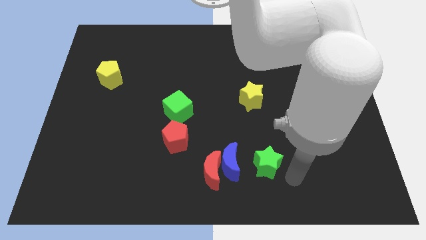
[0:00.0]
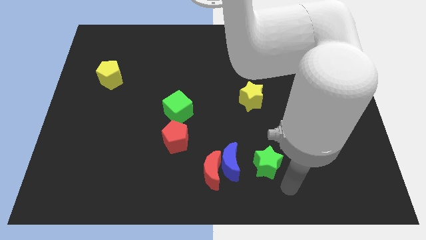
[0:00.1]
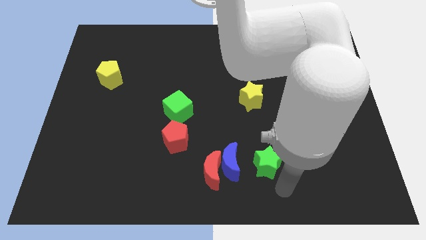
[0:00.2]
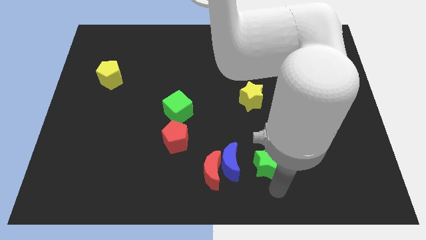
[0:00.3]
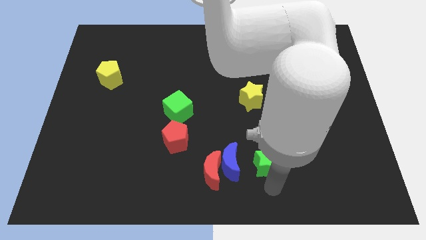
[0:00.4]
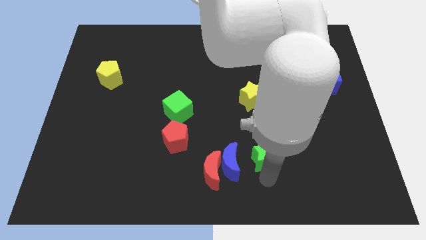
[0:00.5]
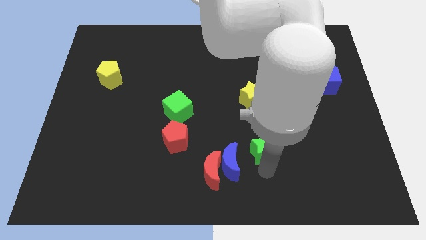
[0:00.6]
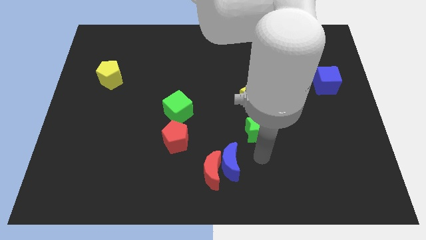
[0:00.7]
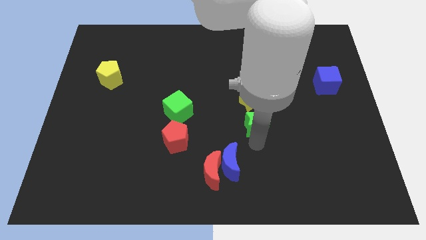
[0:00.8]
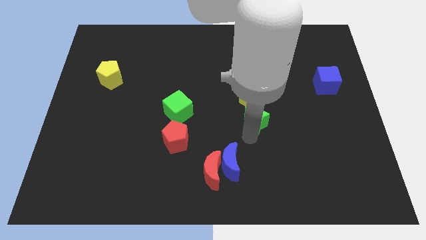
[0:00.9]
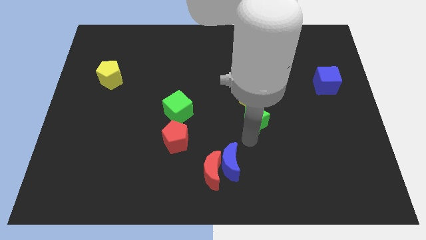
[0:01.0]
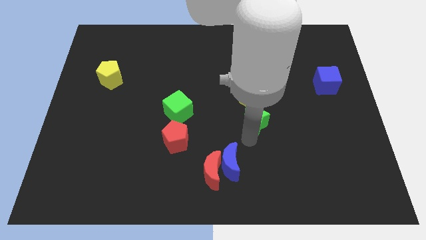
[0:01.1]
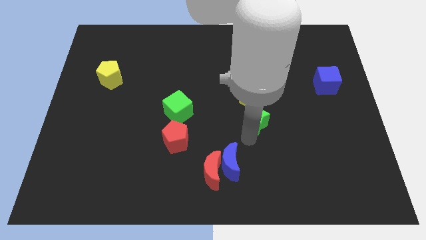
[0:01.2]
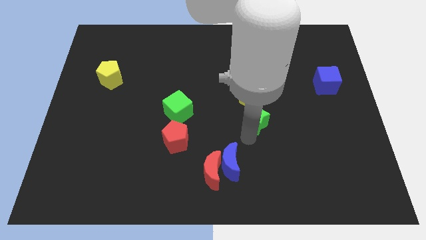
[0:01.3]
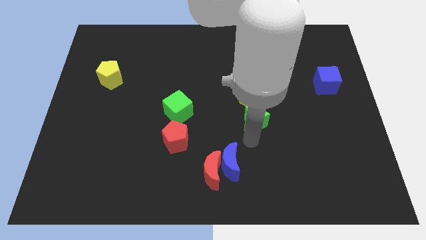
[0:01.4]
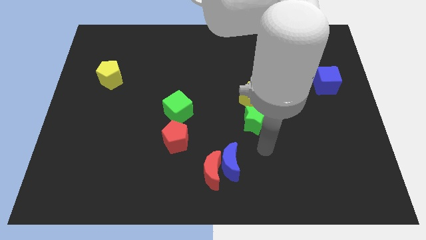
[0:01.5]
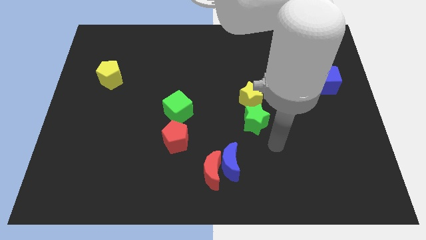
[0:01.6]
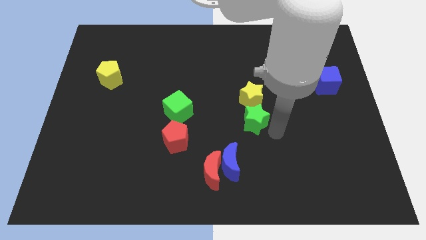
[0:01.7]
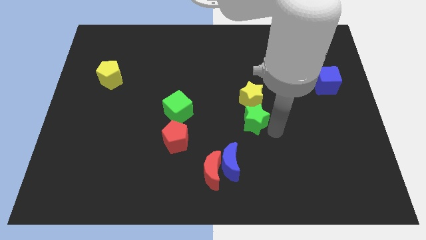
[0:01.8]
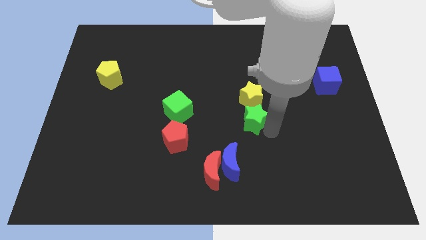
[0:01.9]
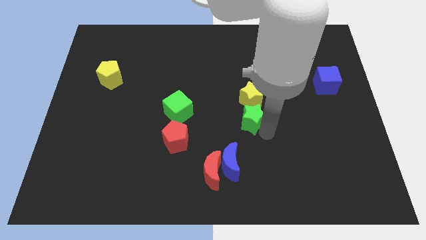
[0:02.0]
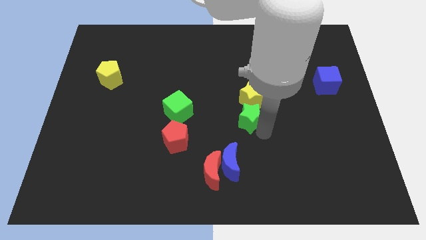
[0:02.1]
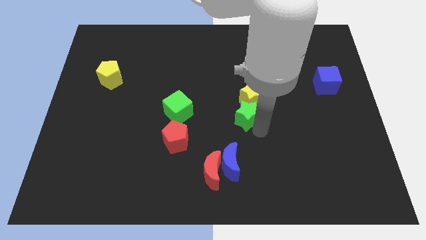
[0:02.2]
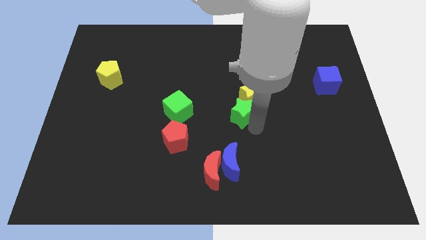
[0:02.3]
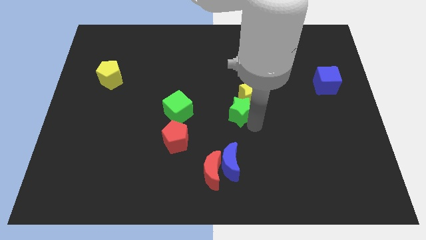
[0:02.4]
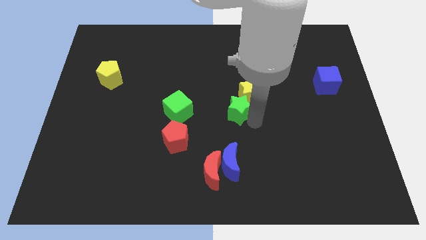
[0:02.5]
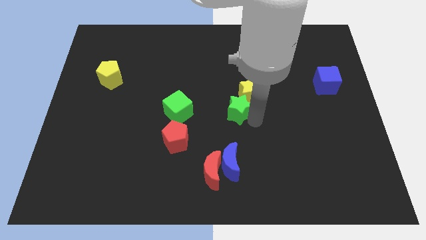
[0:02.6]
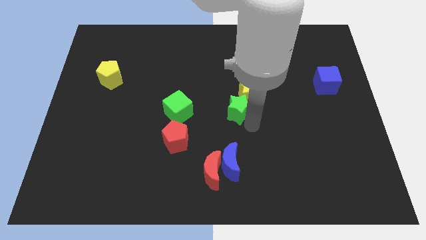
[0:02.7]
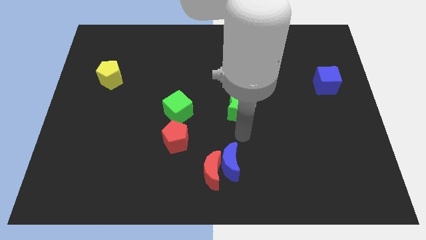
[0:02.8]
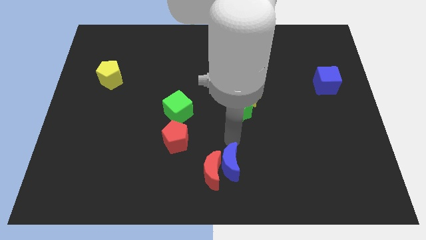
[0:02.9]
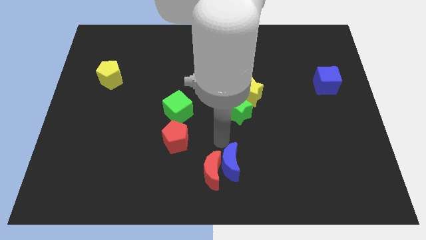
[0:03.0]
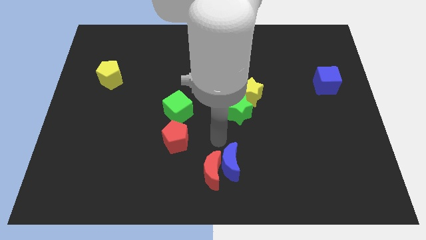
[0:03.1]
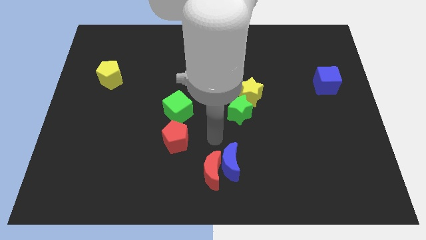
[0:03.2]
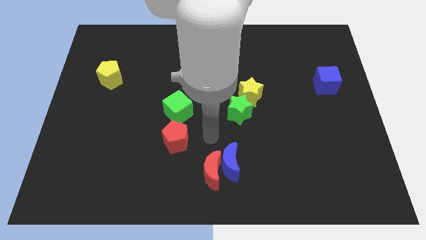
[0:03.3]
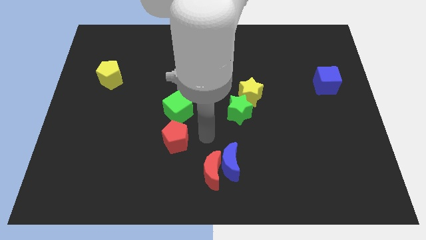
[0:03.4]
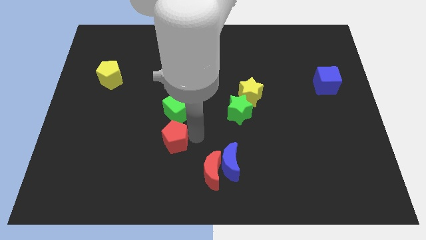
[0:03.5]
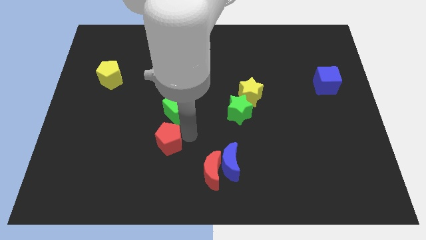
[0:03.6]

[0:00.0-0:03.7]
push green star into the yellow star

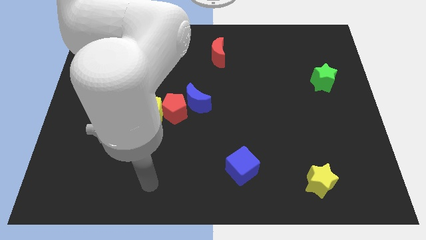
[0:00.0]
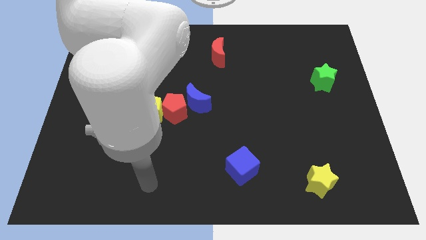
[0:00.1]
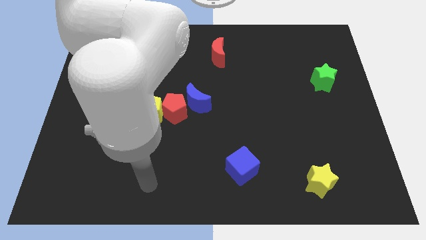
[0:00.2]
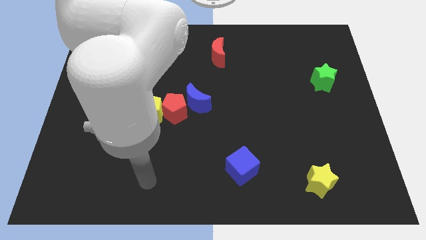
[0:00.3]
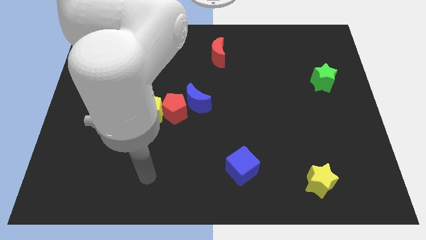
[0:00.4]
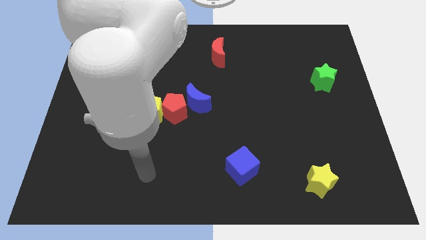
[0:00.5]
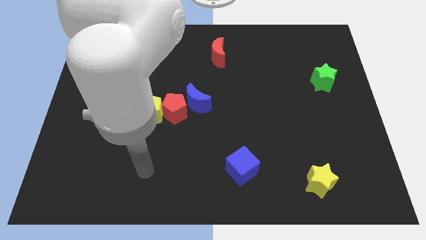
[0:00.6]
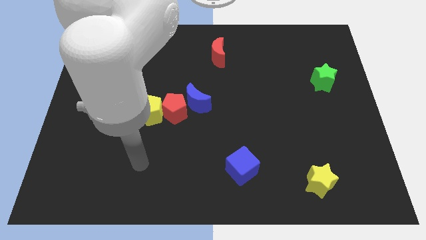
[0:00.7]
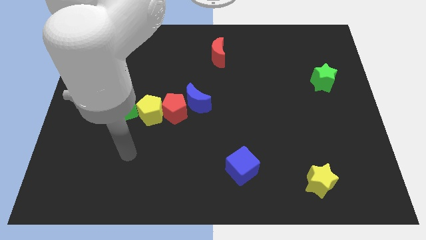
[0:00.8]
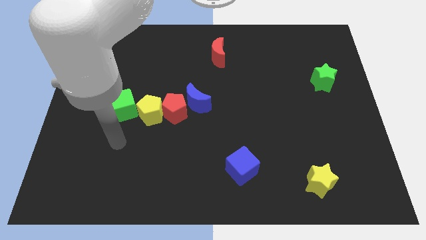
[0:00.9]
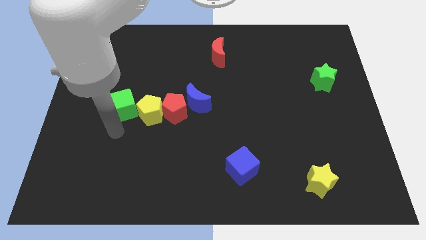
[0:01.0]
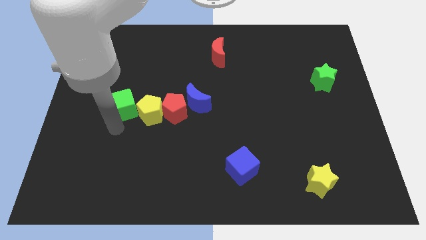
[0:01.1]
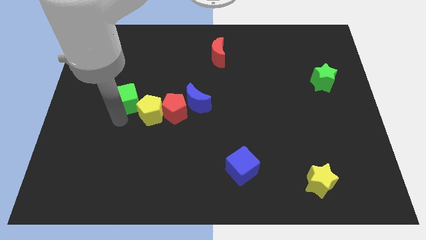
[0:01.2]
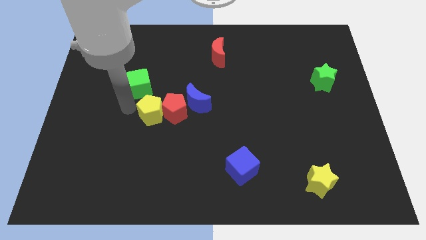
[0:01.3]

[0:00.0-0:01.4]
move your arm near green cube

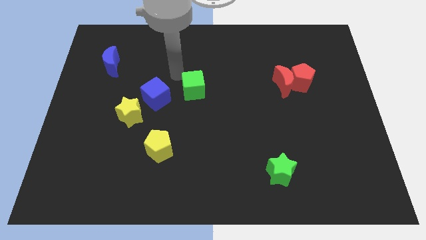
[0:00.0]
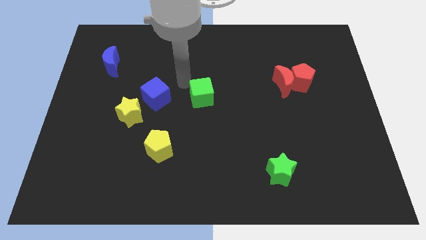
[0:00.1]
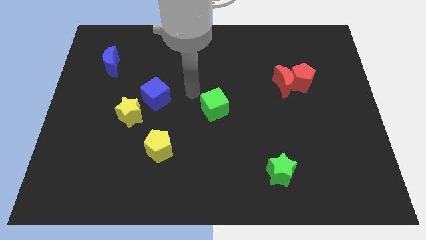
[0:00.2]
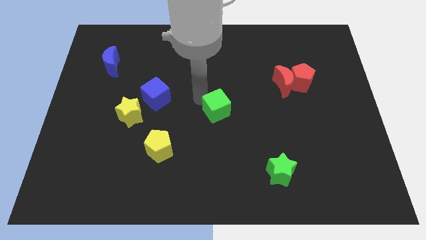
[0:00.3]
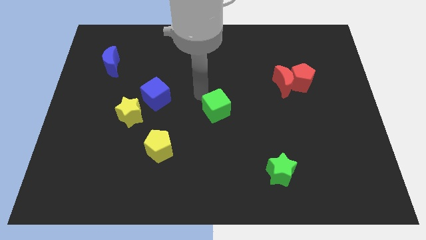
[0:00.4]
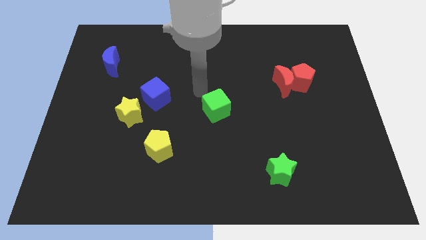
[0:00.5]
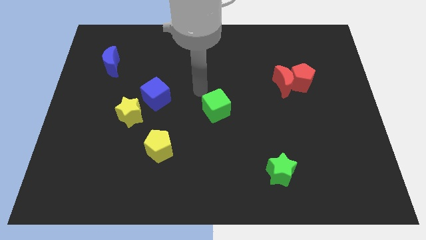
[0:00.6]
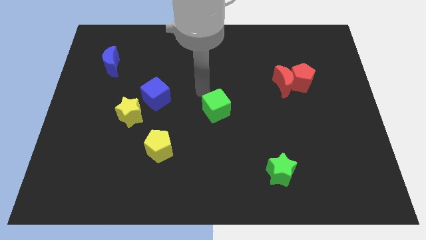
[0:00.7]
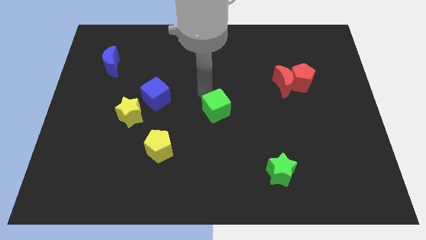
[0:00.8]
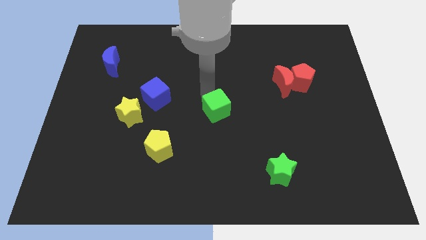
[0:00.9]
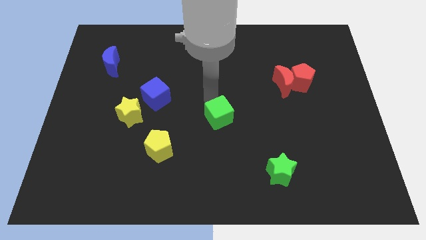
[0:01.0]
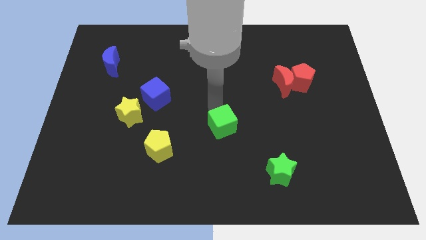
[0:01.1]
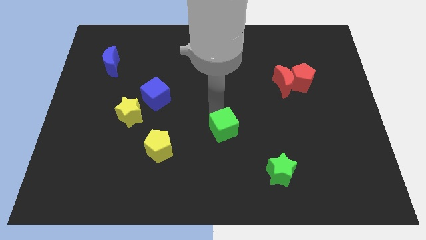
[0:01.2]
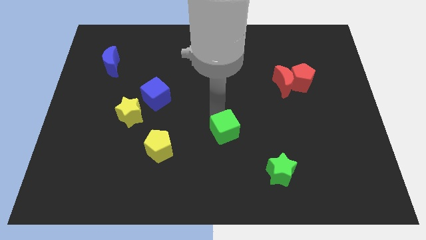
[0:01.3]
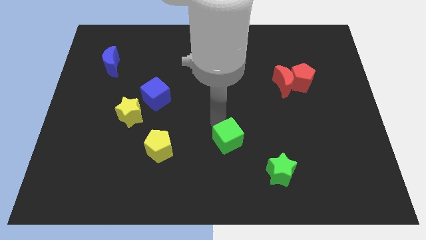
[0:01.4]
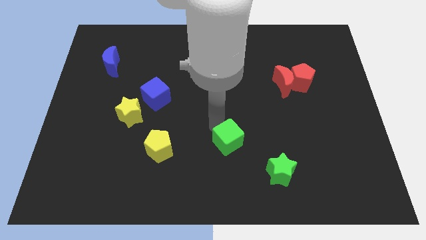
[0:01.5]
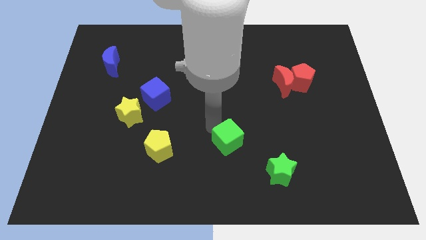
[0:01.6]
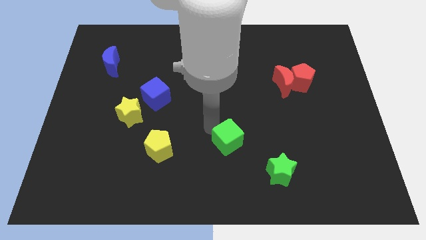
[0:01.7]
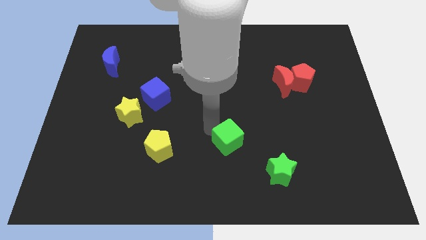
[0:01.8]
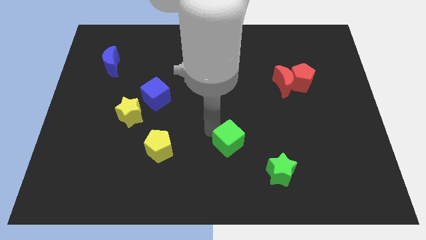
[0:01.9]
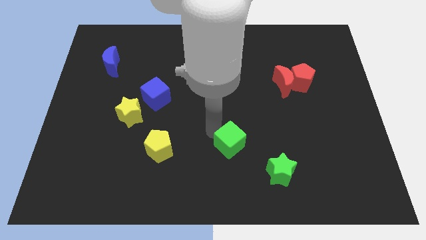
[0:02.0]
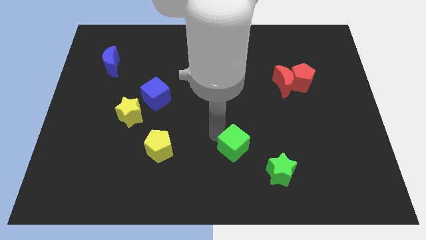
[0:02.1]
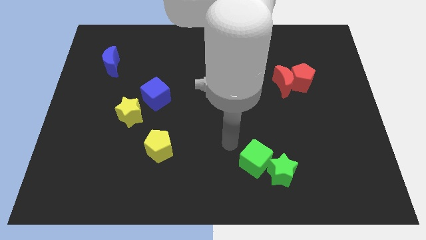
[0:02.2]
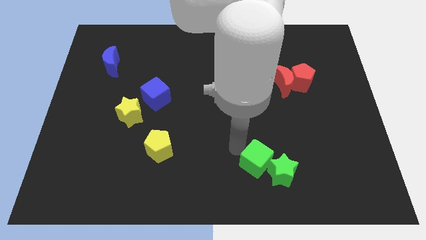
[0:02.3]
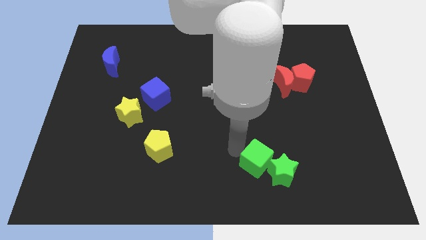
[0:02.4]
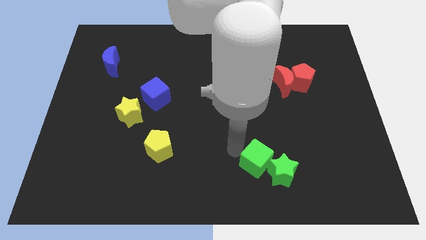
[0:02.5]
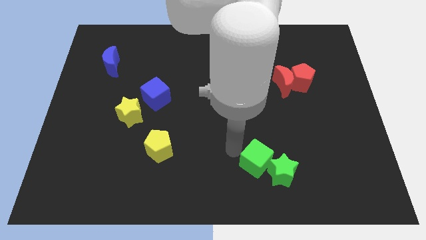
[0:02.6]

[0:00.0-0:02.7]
push the green cube diagonally below the red crescent

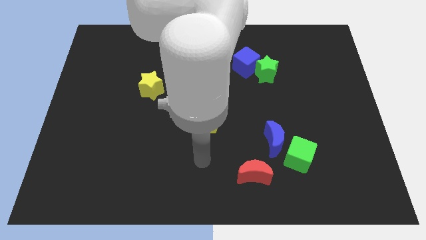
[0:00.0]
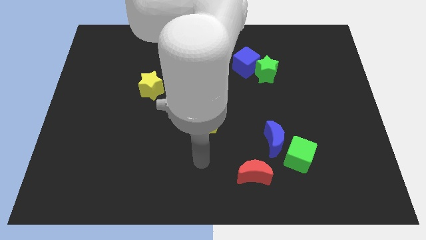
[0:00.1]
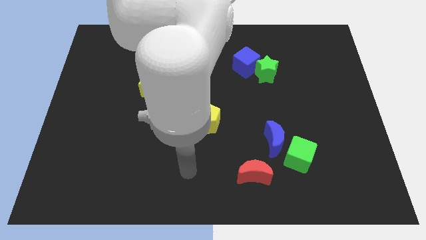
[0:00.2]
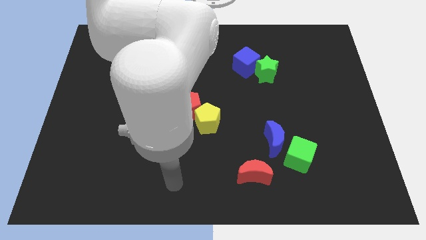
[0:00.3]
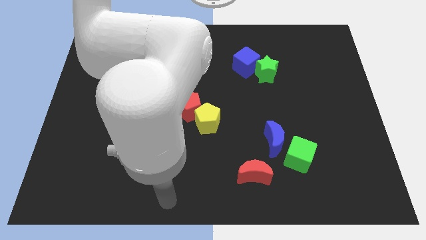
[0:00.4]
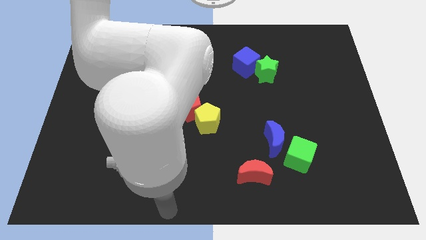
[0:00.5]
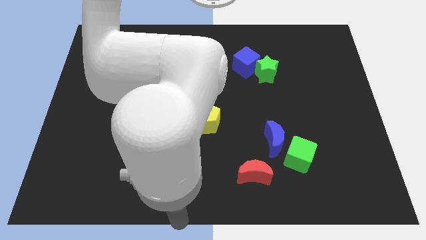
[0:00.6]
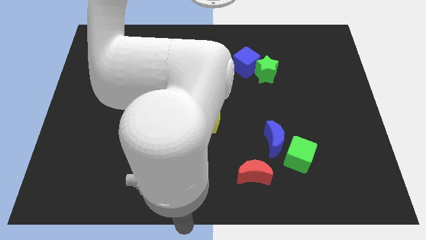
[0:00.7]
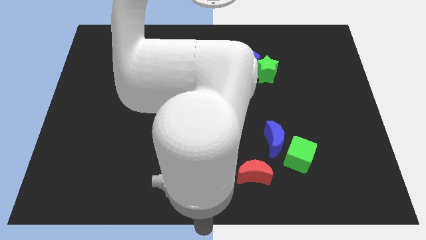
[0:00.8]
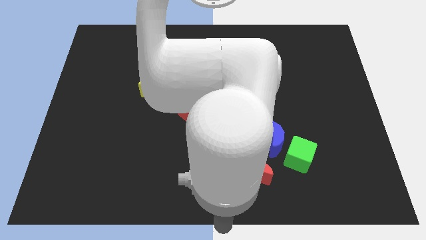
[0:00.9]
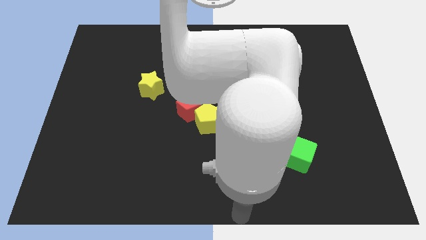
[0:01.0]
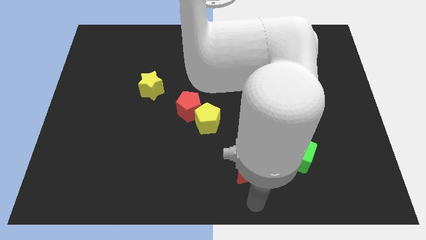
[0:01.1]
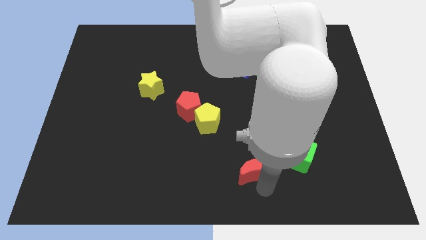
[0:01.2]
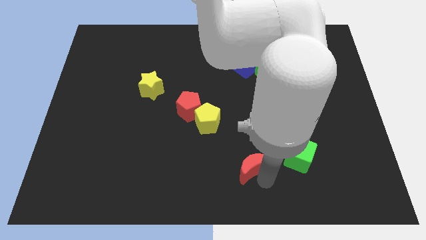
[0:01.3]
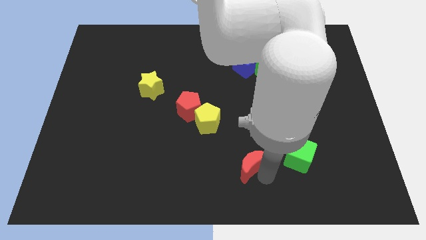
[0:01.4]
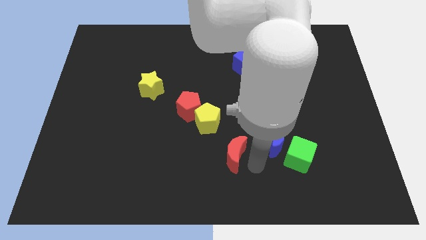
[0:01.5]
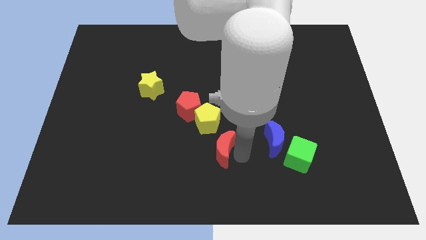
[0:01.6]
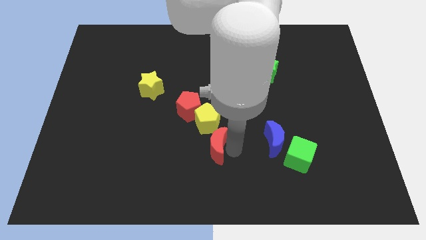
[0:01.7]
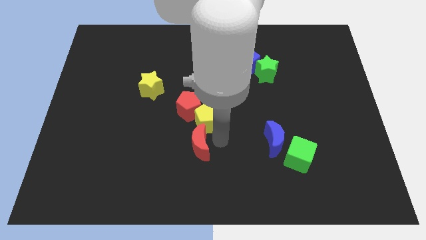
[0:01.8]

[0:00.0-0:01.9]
push the red crescent to the bottom of the yellow pentagon
